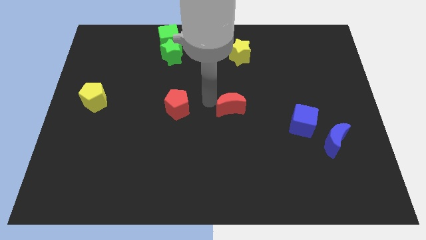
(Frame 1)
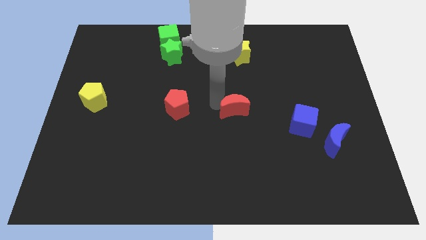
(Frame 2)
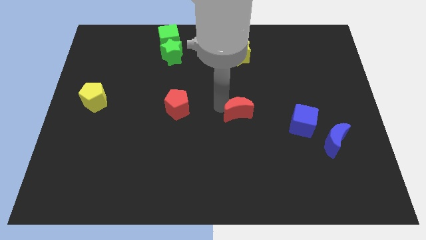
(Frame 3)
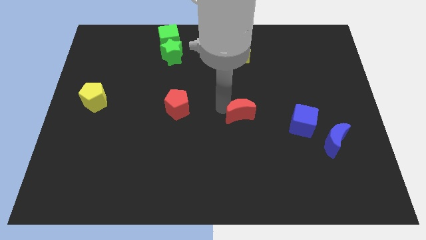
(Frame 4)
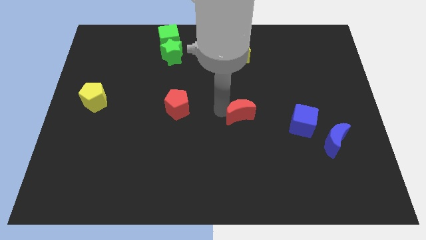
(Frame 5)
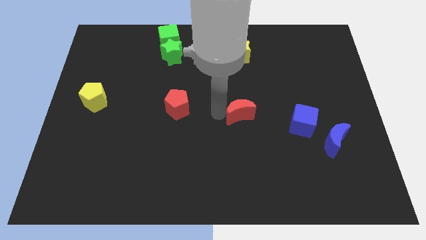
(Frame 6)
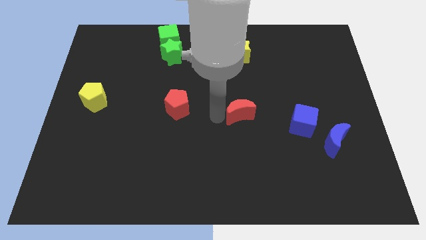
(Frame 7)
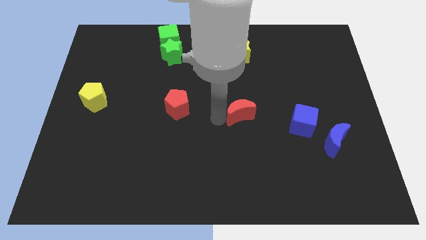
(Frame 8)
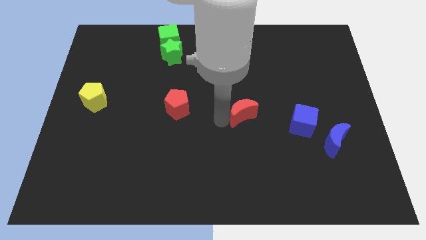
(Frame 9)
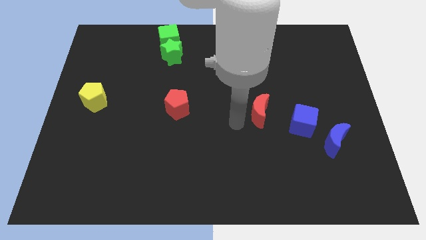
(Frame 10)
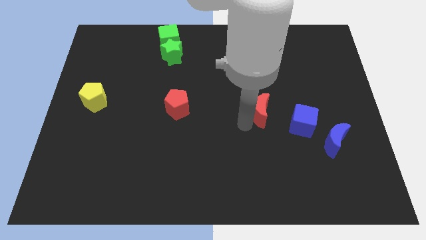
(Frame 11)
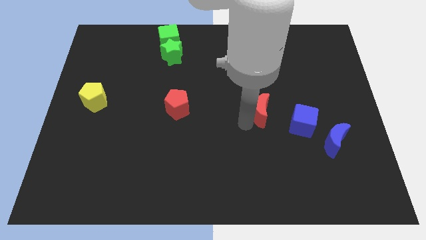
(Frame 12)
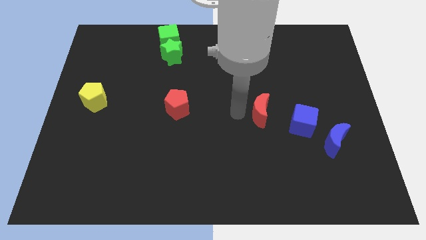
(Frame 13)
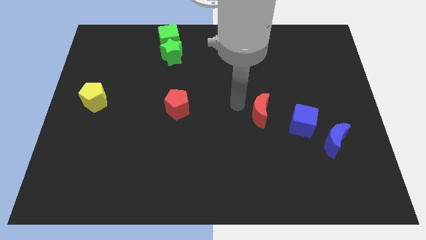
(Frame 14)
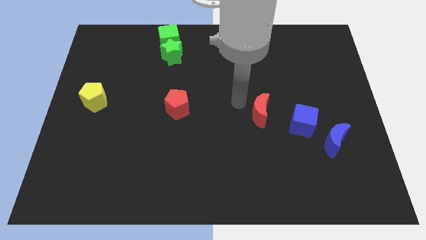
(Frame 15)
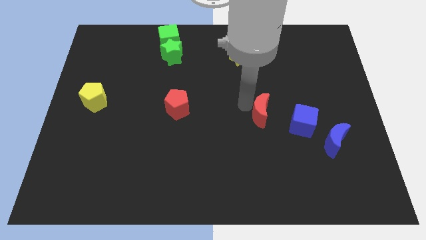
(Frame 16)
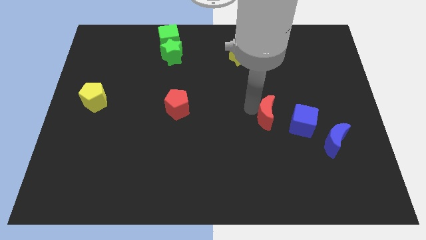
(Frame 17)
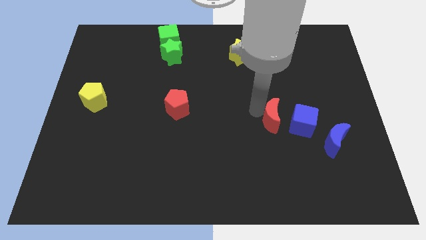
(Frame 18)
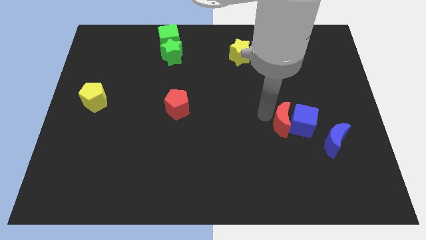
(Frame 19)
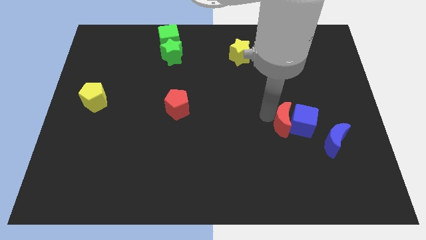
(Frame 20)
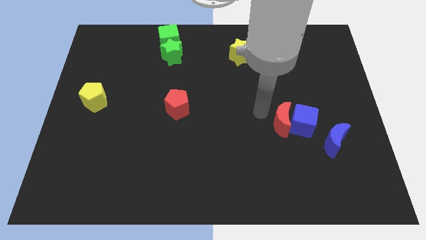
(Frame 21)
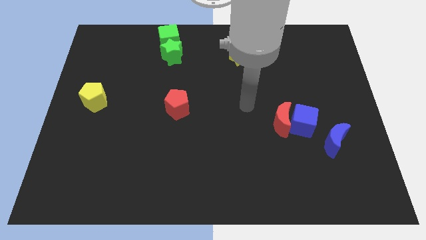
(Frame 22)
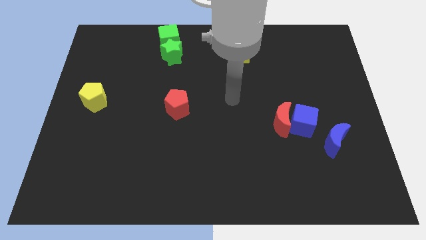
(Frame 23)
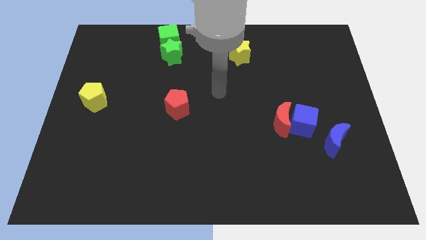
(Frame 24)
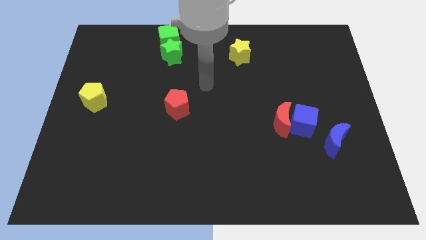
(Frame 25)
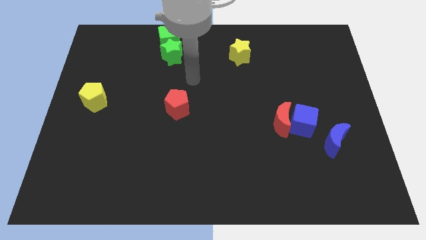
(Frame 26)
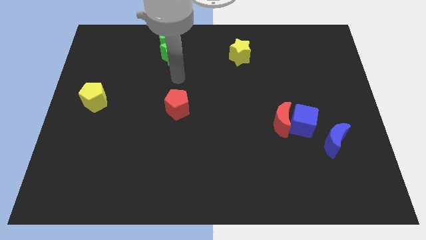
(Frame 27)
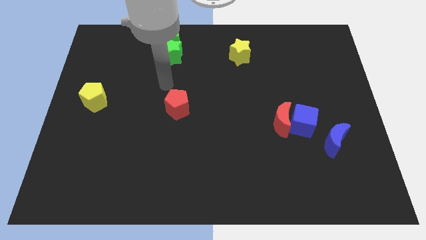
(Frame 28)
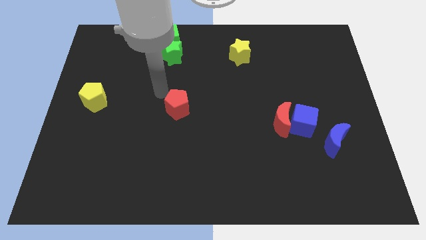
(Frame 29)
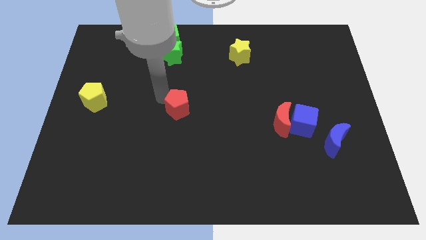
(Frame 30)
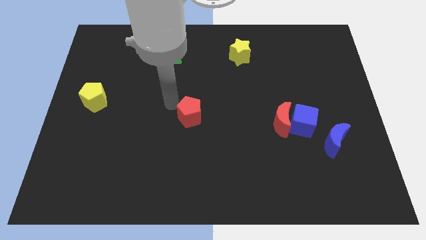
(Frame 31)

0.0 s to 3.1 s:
push the red crescent into the left side of the blue cube

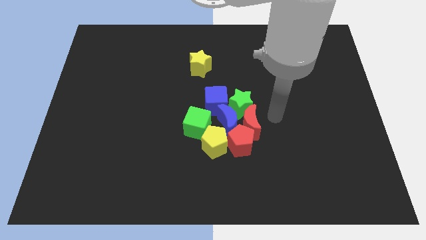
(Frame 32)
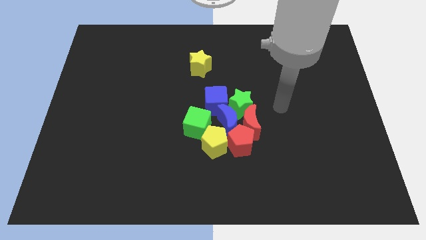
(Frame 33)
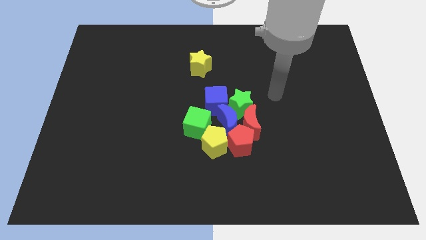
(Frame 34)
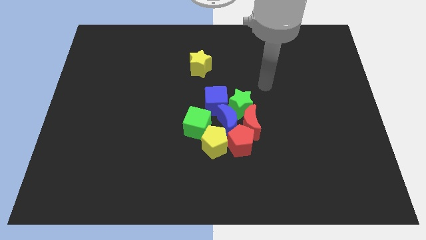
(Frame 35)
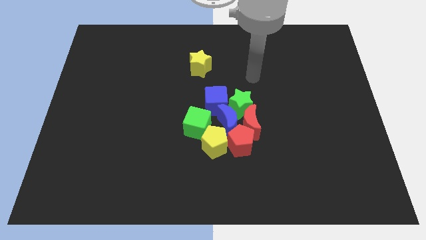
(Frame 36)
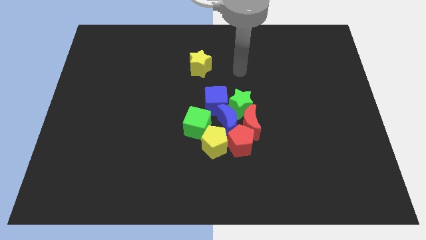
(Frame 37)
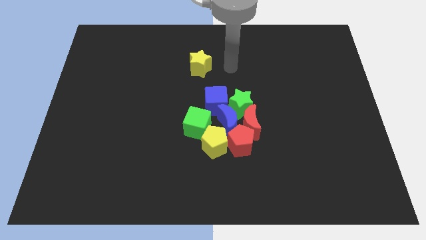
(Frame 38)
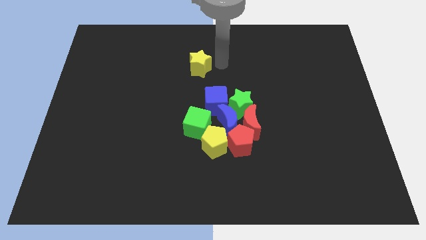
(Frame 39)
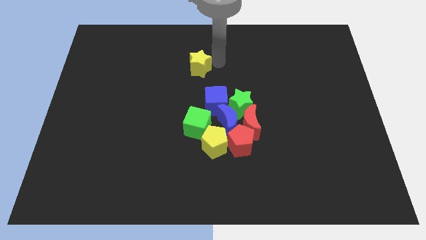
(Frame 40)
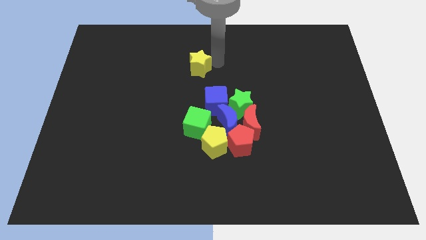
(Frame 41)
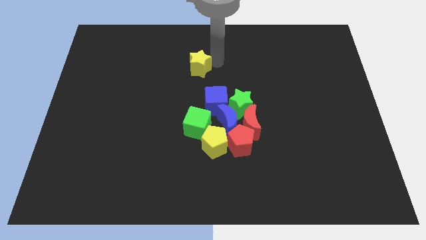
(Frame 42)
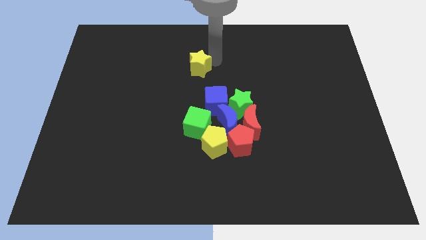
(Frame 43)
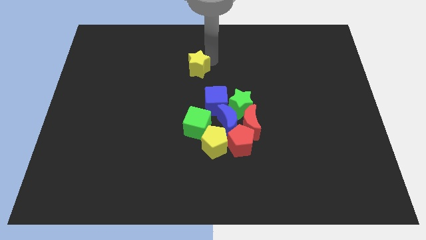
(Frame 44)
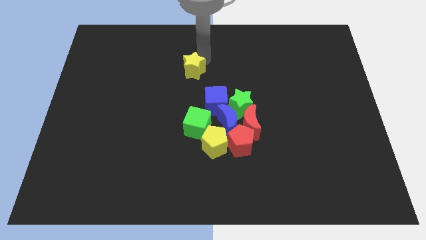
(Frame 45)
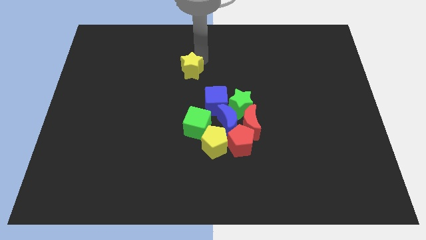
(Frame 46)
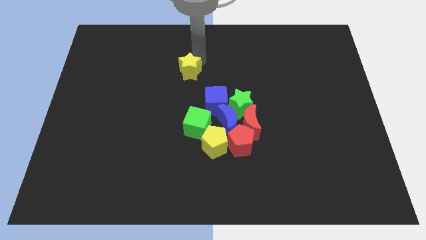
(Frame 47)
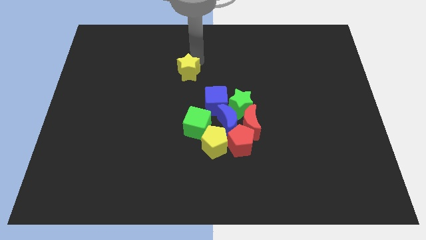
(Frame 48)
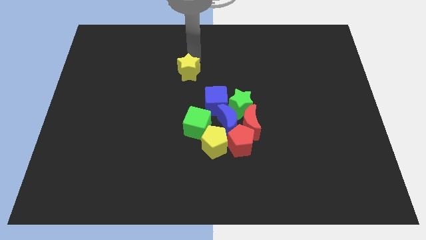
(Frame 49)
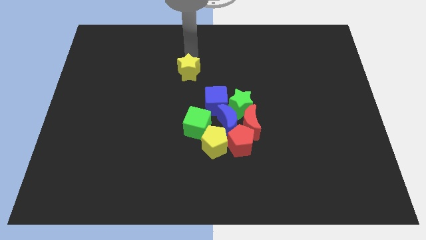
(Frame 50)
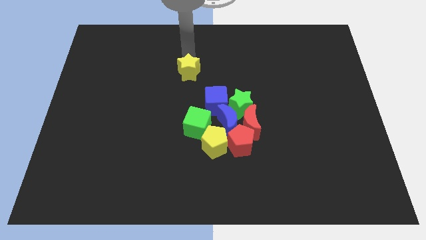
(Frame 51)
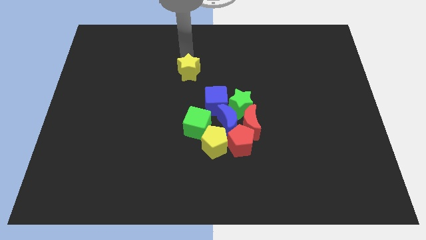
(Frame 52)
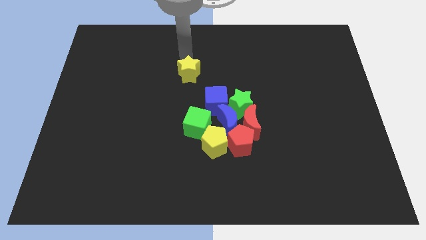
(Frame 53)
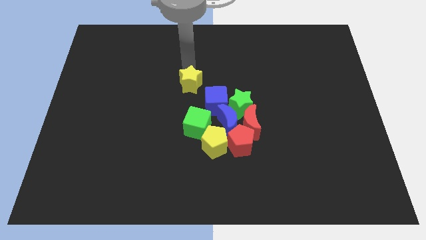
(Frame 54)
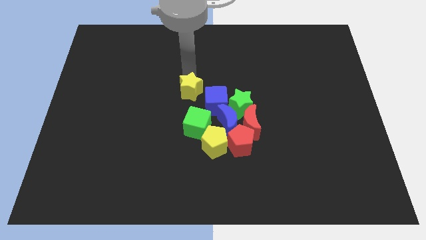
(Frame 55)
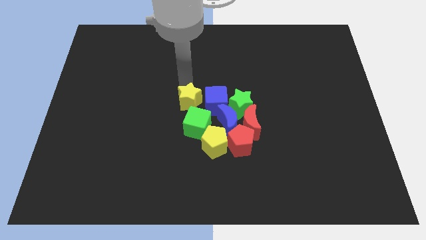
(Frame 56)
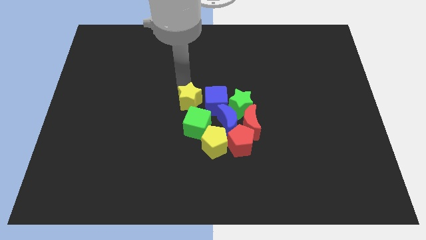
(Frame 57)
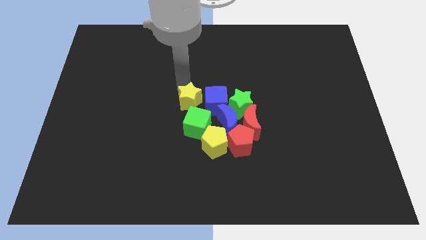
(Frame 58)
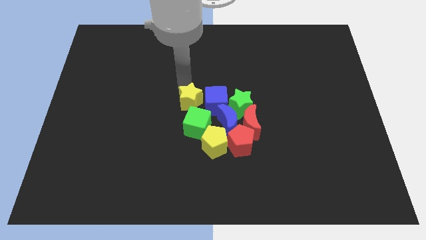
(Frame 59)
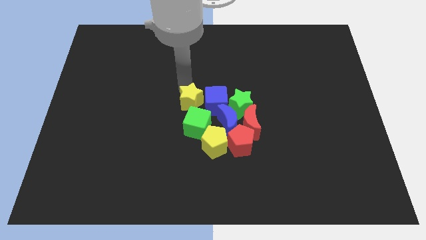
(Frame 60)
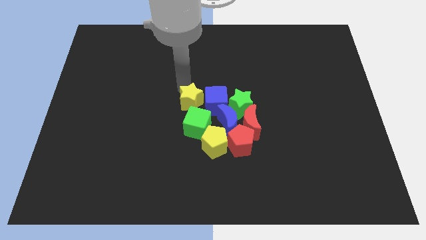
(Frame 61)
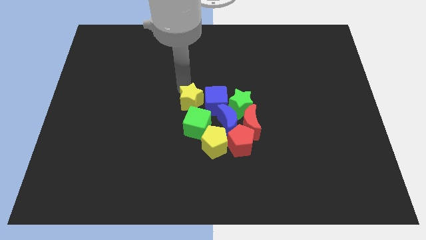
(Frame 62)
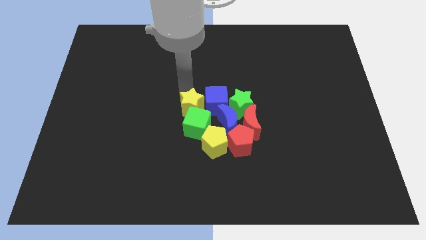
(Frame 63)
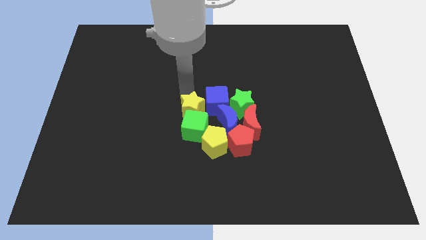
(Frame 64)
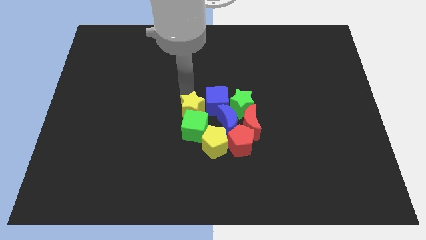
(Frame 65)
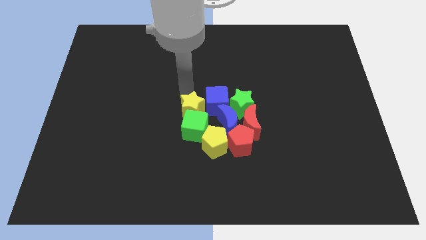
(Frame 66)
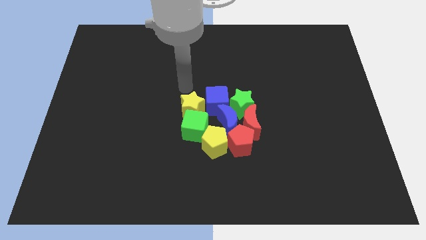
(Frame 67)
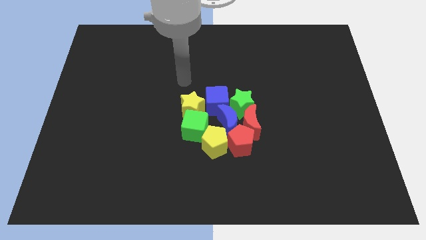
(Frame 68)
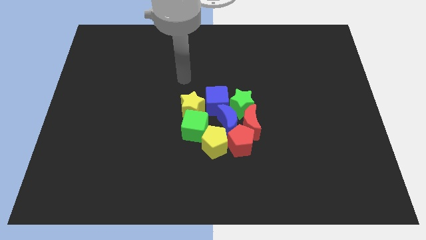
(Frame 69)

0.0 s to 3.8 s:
move the yellow star above the green cube

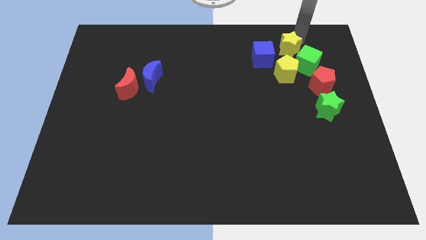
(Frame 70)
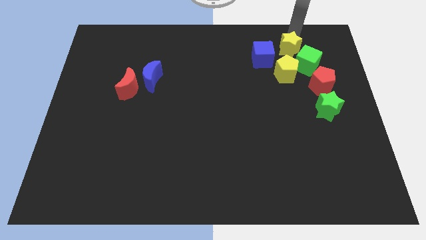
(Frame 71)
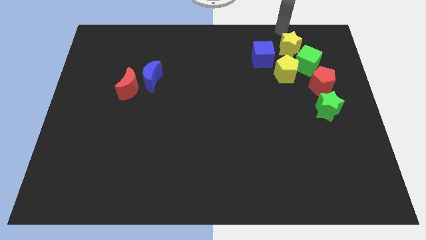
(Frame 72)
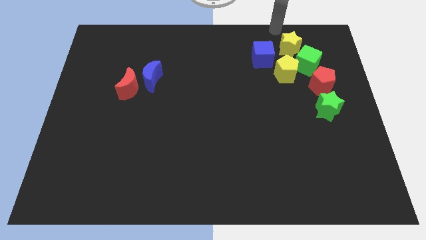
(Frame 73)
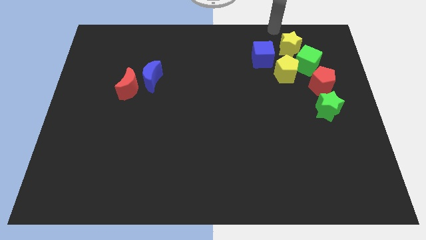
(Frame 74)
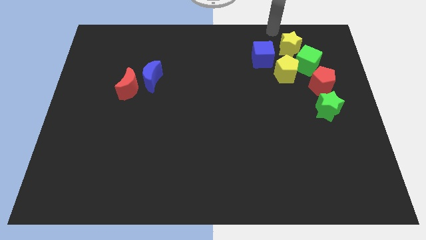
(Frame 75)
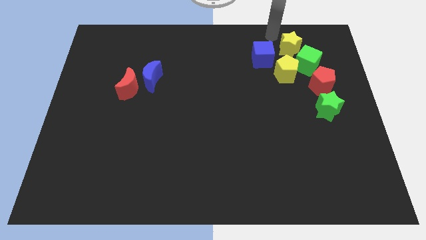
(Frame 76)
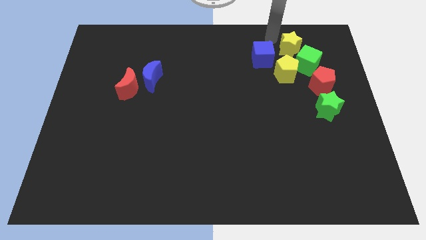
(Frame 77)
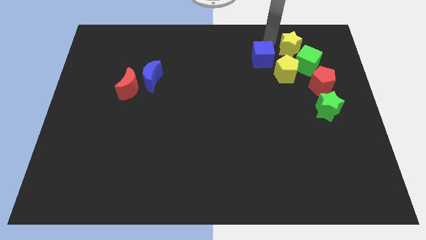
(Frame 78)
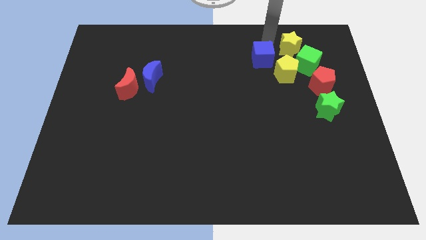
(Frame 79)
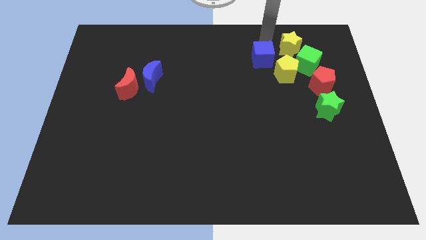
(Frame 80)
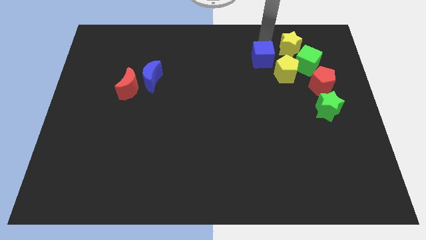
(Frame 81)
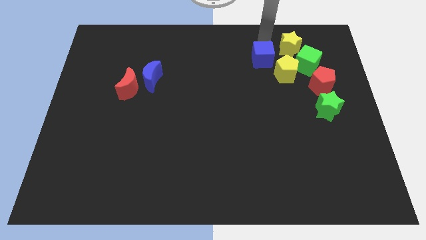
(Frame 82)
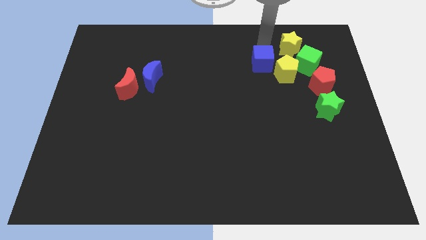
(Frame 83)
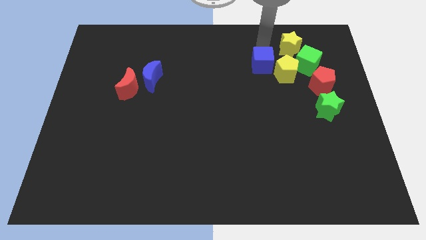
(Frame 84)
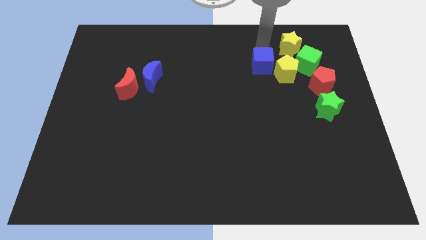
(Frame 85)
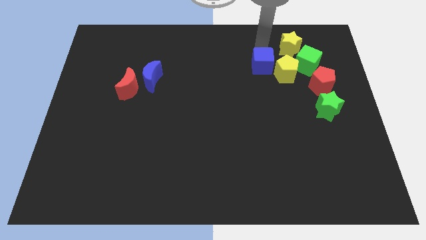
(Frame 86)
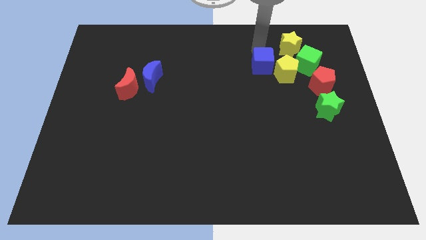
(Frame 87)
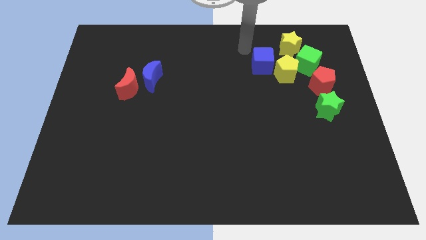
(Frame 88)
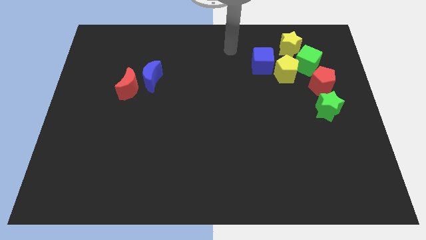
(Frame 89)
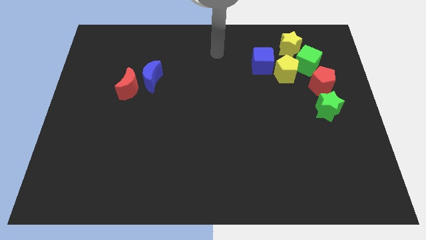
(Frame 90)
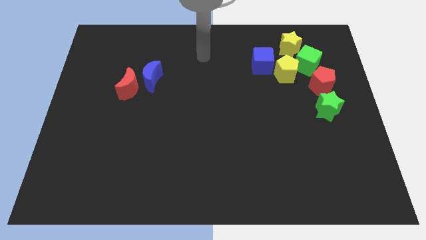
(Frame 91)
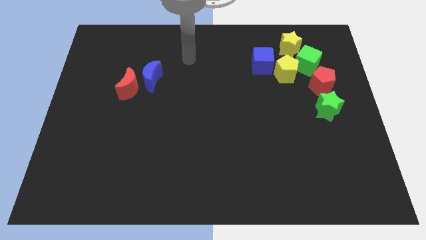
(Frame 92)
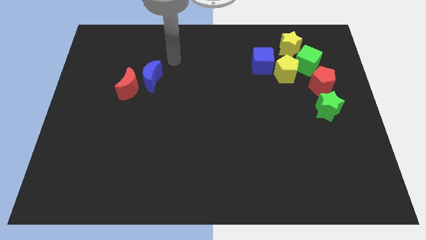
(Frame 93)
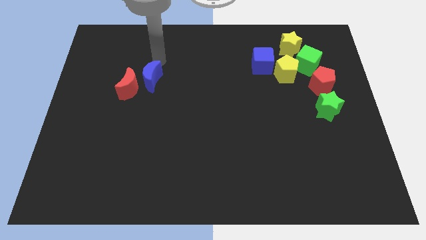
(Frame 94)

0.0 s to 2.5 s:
move the blue cube slightly close to the yellow pentagon
